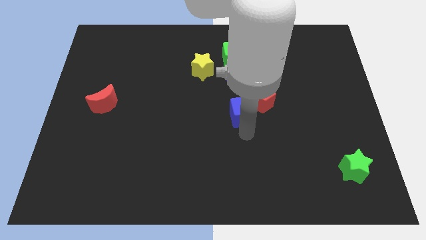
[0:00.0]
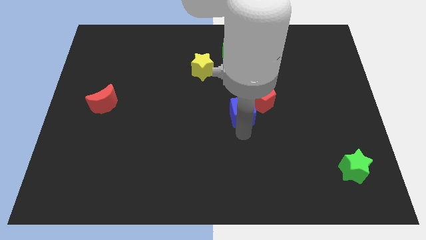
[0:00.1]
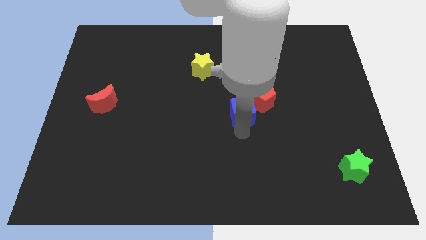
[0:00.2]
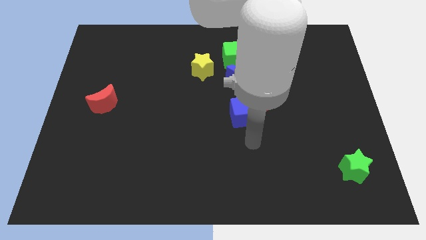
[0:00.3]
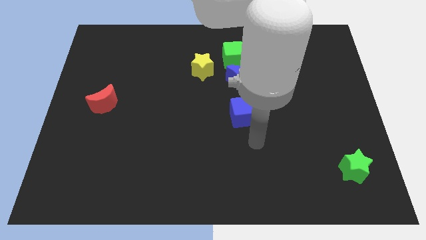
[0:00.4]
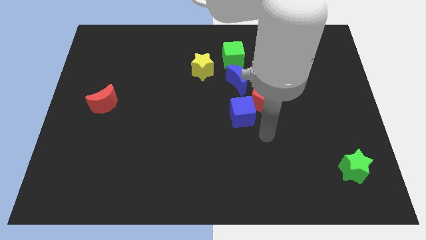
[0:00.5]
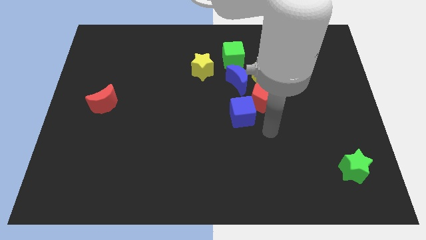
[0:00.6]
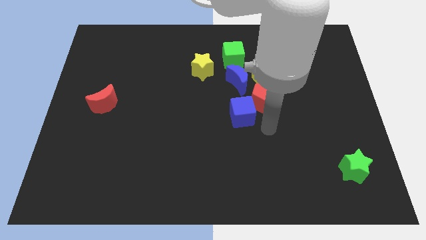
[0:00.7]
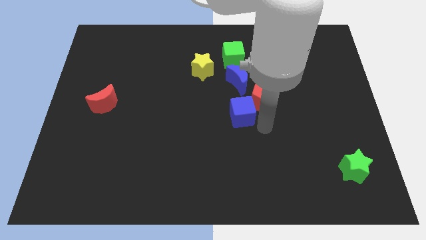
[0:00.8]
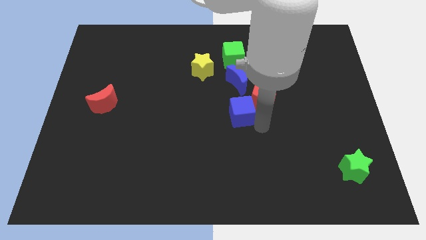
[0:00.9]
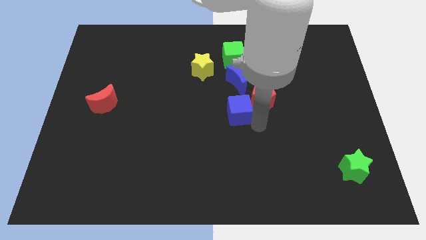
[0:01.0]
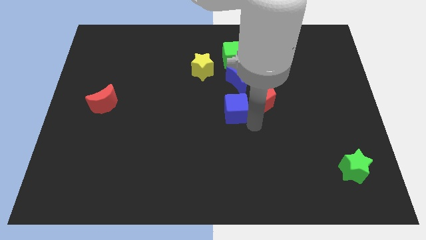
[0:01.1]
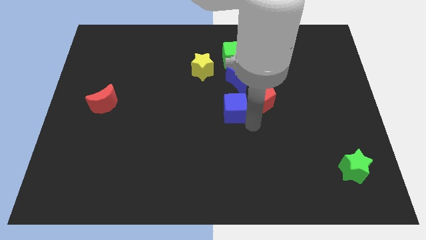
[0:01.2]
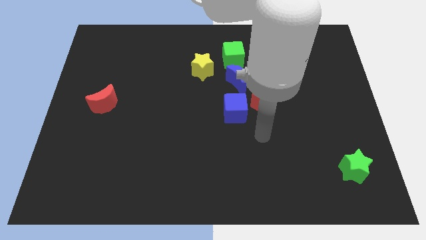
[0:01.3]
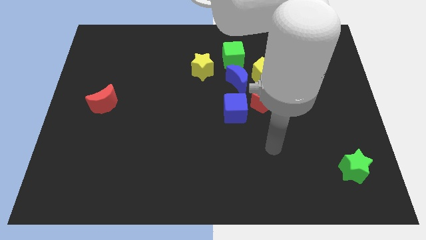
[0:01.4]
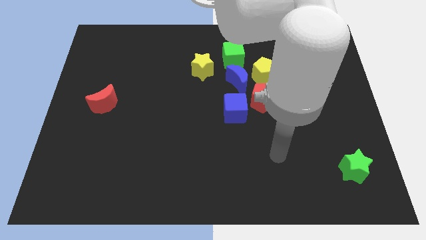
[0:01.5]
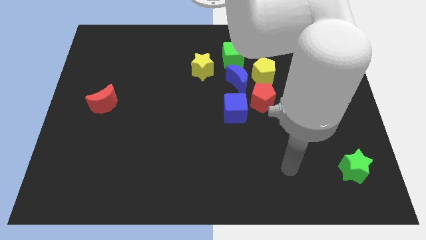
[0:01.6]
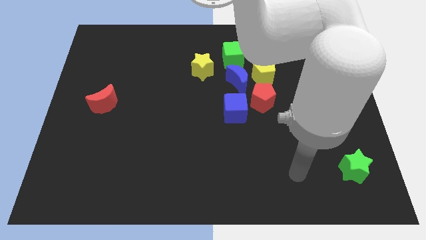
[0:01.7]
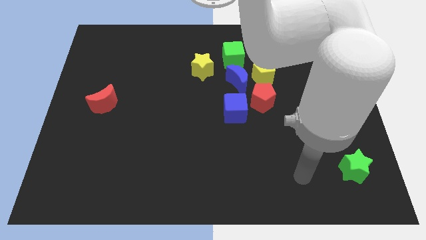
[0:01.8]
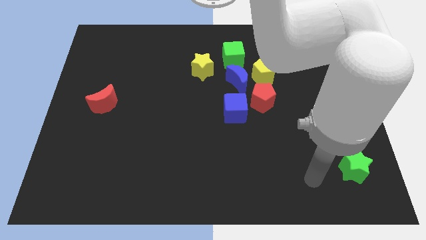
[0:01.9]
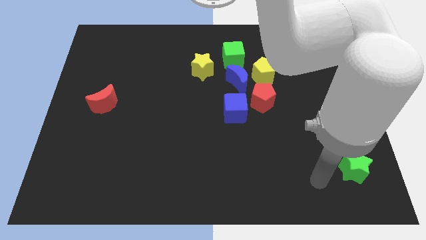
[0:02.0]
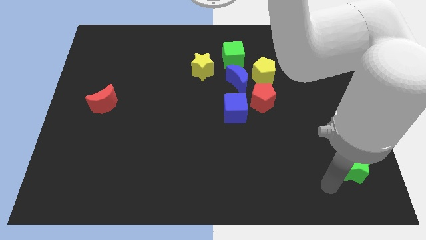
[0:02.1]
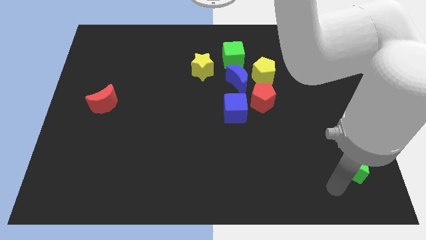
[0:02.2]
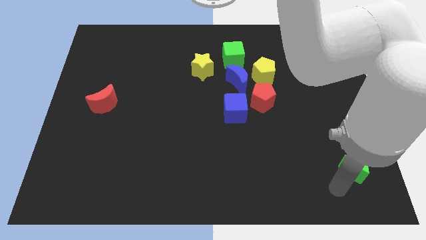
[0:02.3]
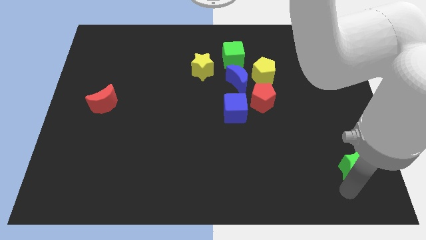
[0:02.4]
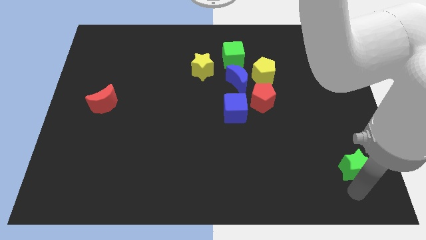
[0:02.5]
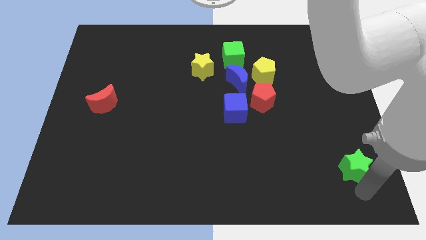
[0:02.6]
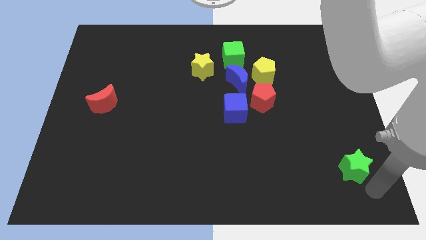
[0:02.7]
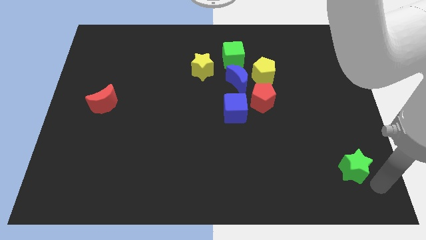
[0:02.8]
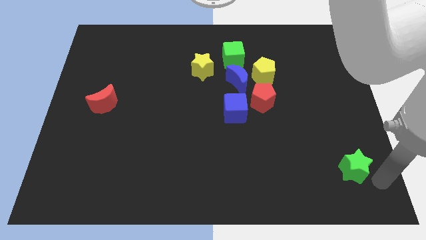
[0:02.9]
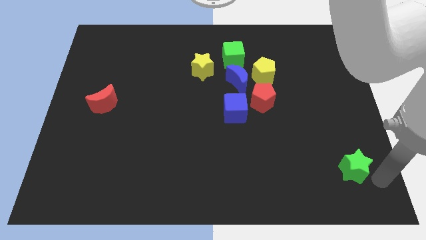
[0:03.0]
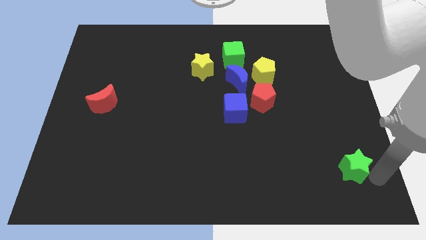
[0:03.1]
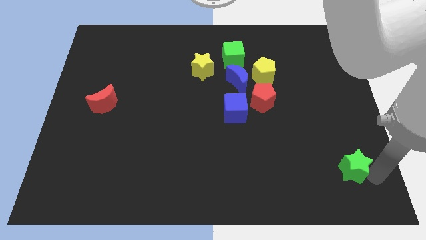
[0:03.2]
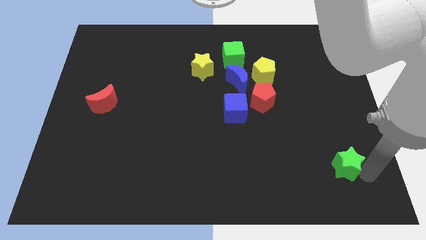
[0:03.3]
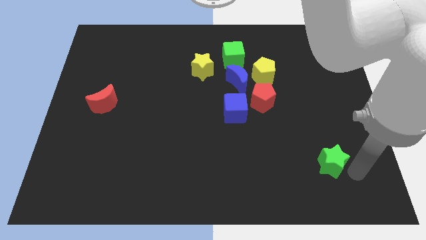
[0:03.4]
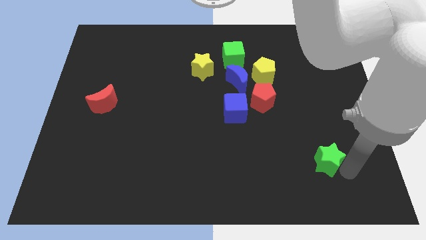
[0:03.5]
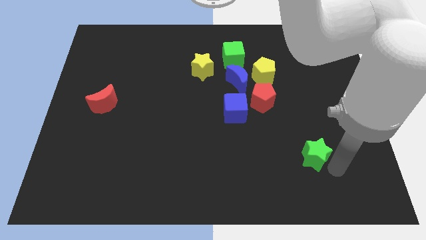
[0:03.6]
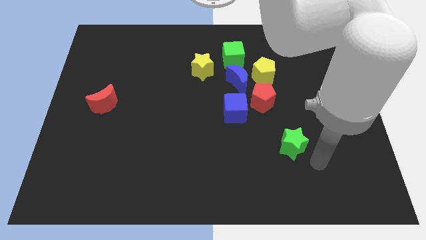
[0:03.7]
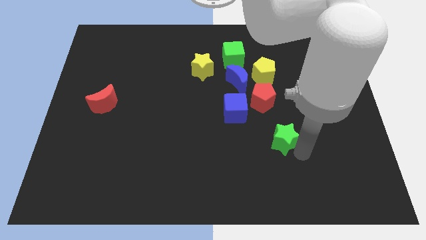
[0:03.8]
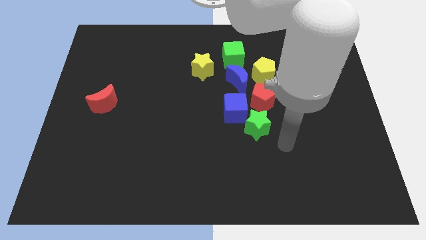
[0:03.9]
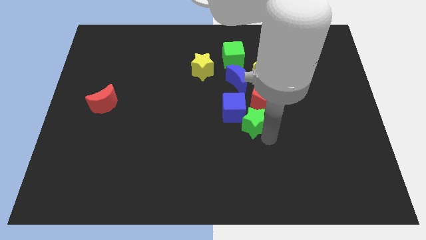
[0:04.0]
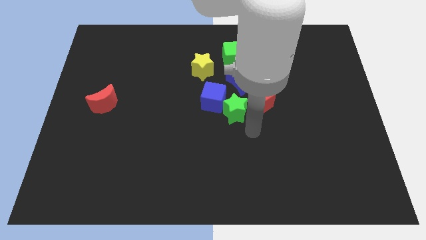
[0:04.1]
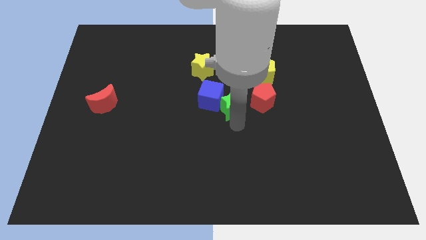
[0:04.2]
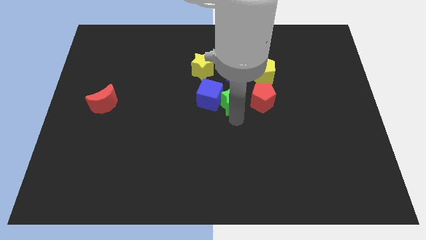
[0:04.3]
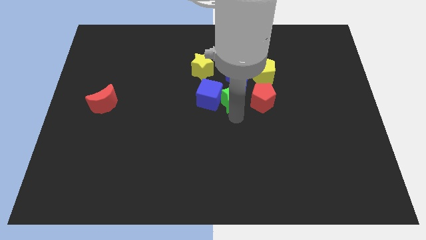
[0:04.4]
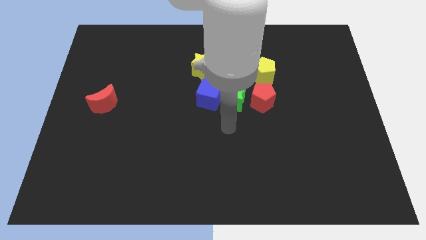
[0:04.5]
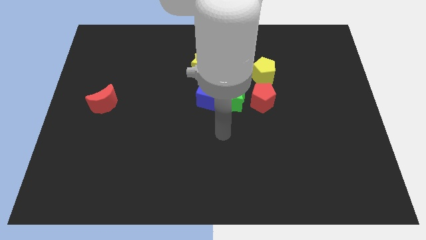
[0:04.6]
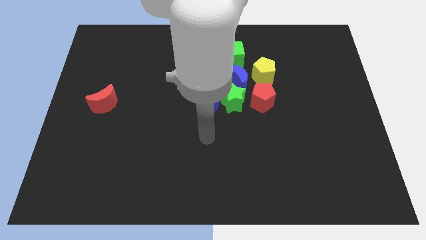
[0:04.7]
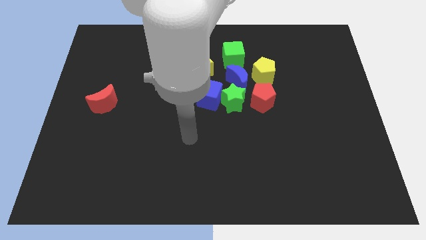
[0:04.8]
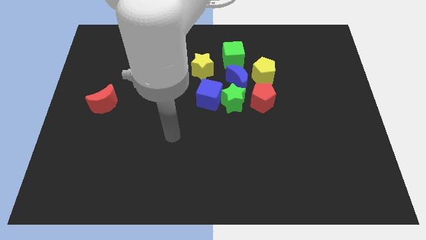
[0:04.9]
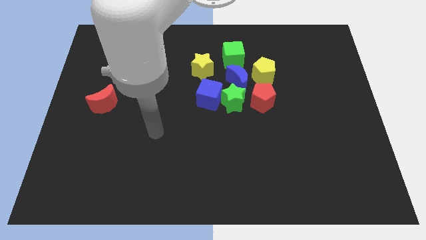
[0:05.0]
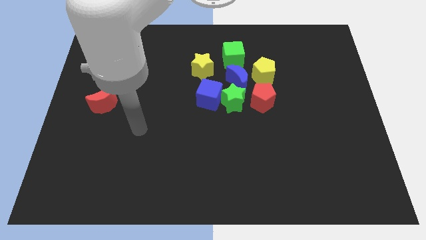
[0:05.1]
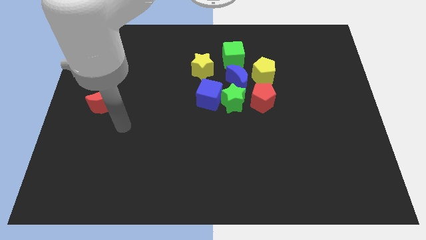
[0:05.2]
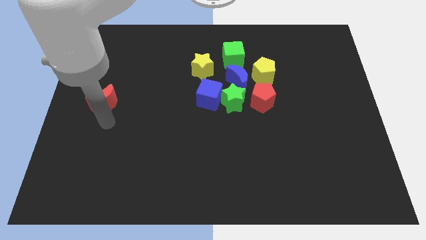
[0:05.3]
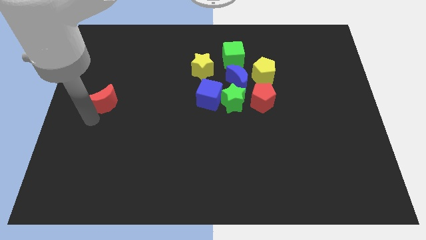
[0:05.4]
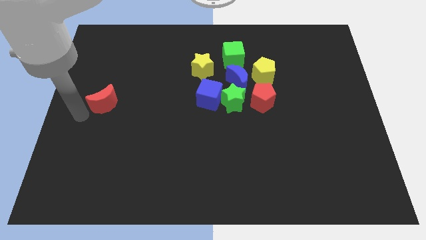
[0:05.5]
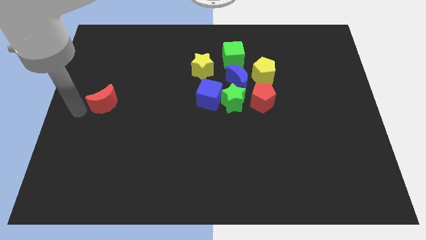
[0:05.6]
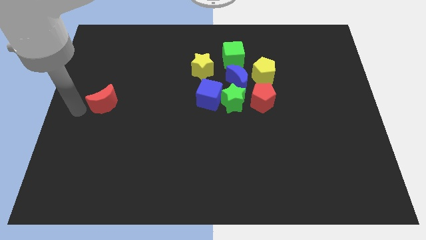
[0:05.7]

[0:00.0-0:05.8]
place the green star below the blue crescent

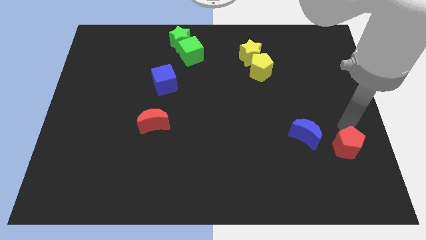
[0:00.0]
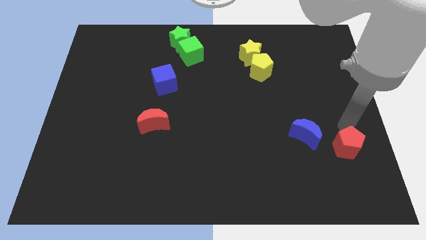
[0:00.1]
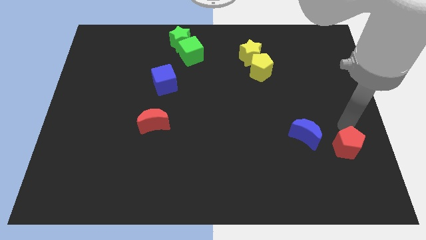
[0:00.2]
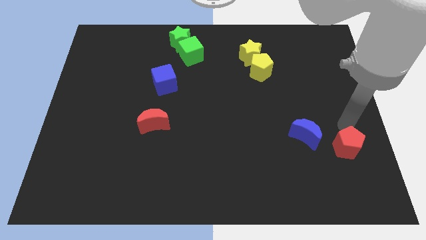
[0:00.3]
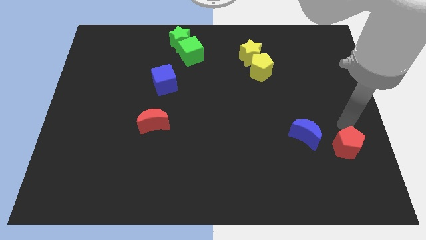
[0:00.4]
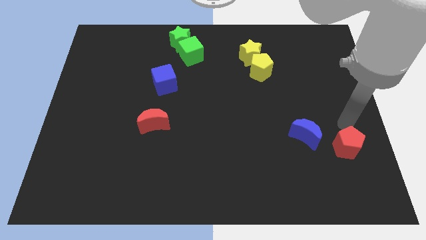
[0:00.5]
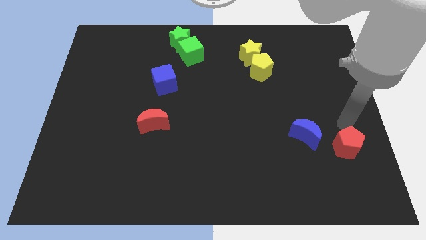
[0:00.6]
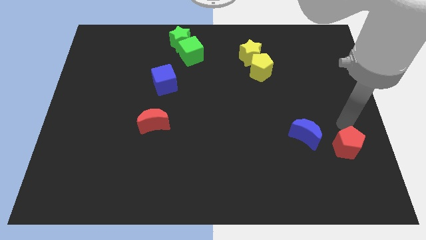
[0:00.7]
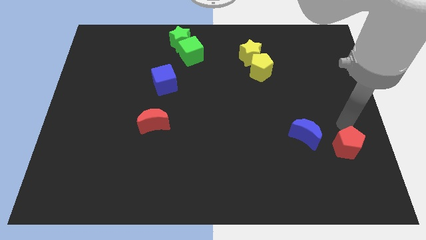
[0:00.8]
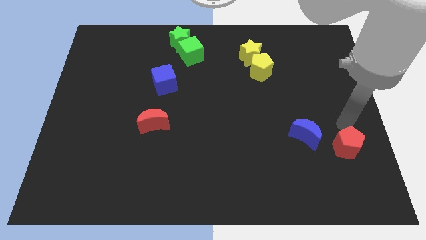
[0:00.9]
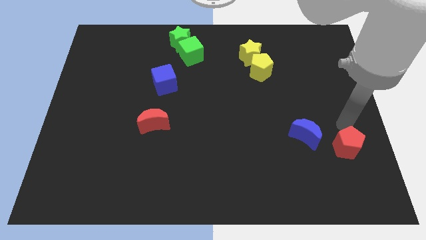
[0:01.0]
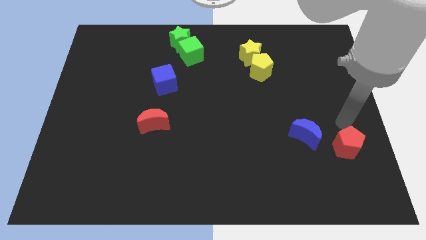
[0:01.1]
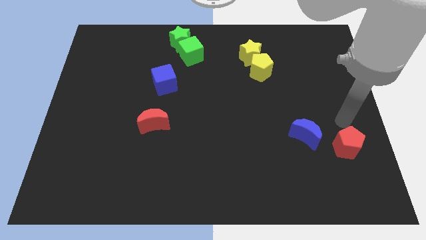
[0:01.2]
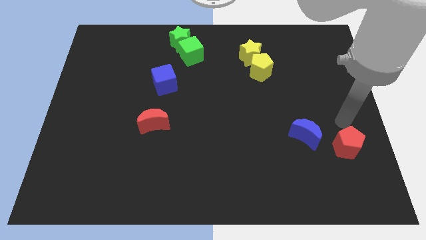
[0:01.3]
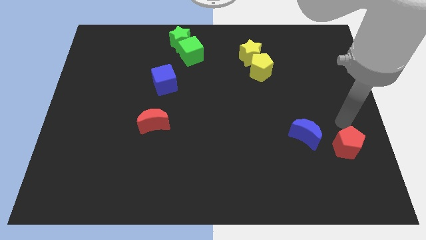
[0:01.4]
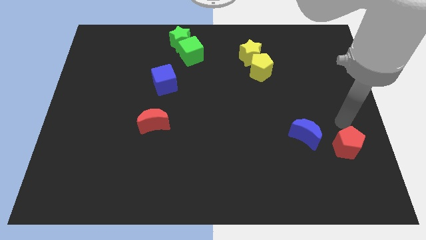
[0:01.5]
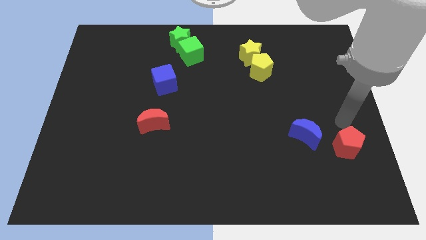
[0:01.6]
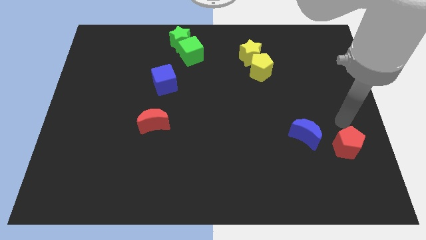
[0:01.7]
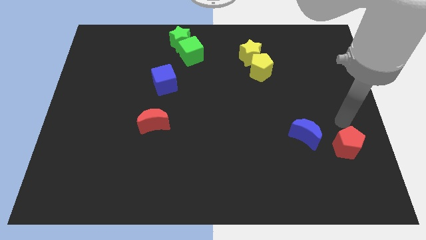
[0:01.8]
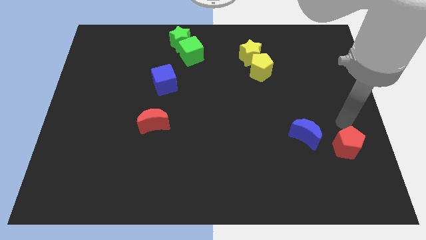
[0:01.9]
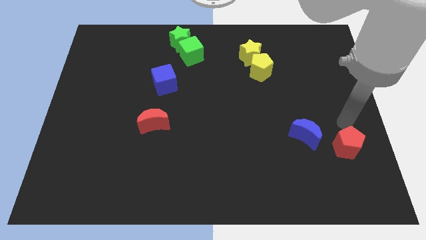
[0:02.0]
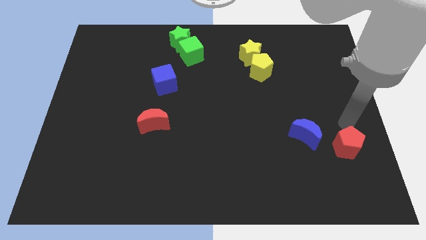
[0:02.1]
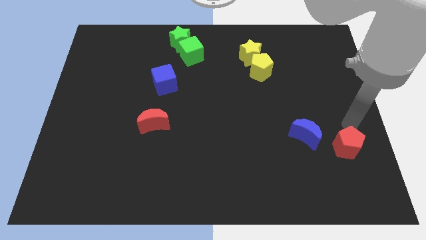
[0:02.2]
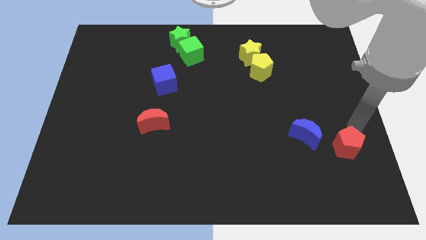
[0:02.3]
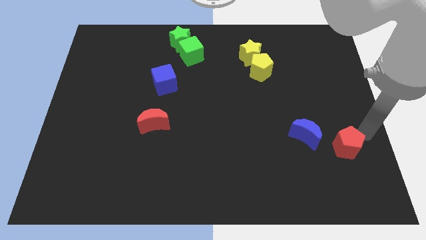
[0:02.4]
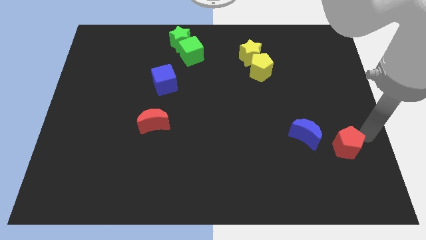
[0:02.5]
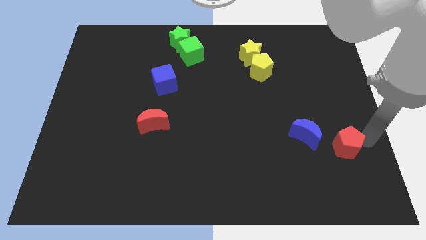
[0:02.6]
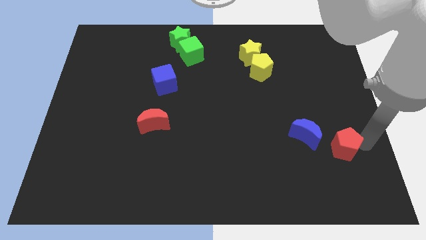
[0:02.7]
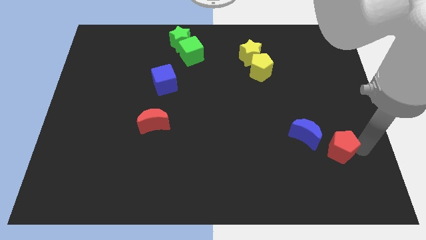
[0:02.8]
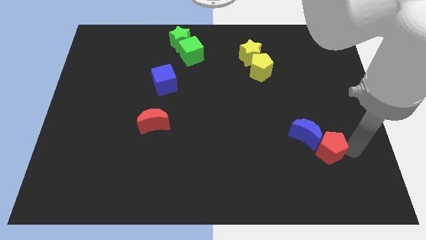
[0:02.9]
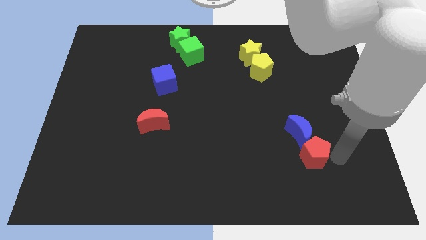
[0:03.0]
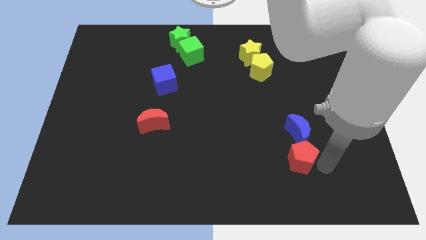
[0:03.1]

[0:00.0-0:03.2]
push the red pentagon at the bottom of the blue moon

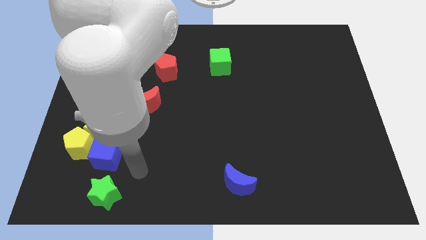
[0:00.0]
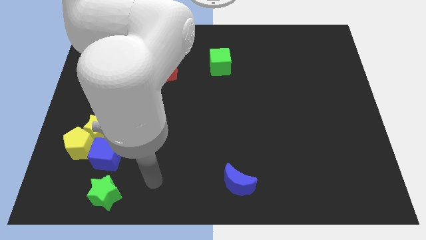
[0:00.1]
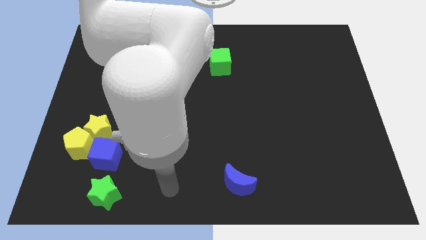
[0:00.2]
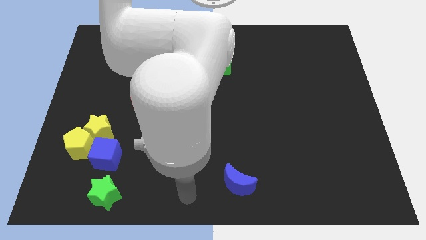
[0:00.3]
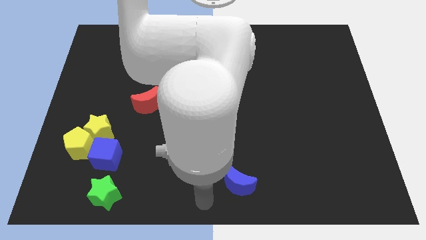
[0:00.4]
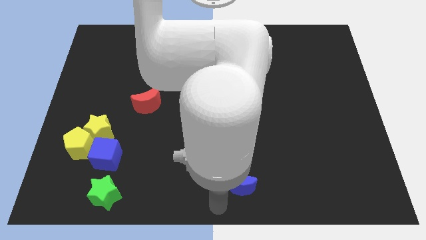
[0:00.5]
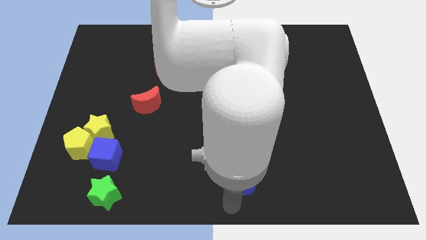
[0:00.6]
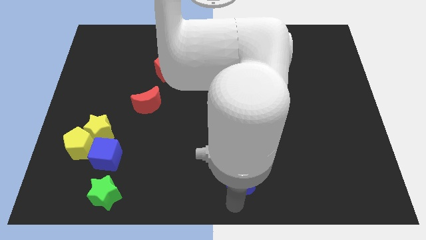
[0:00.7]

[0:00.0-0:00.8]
place arm at the bottom of blue moon
